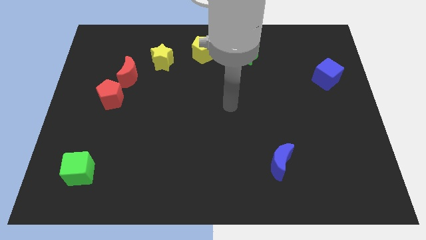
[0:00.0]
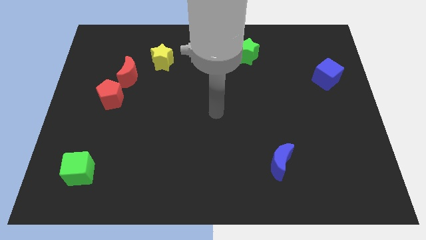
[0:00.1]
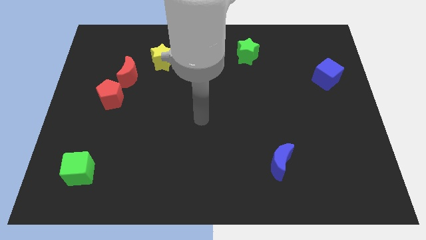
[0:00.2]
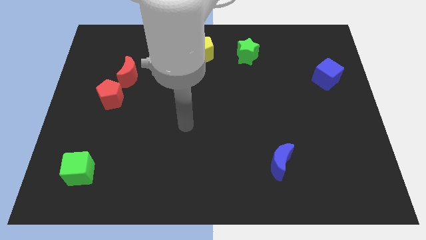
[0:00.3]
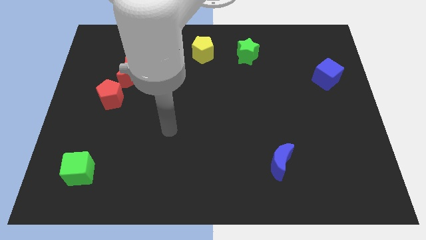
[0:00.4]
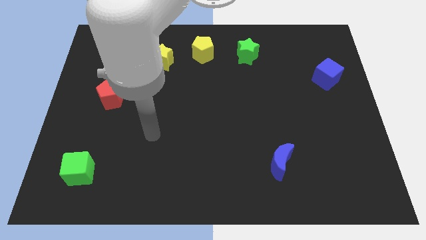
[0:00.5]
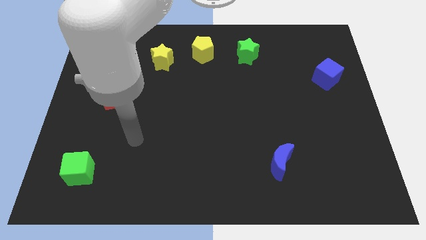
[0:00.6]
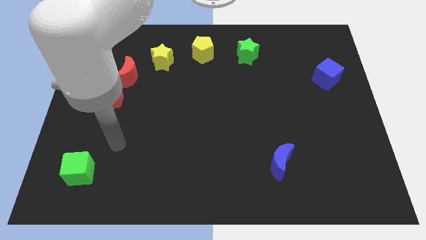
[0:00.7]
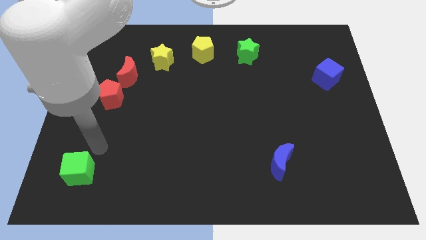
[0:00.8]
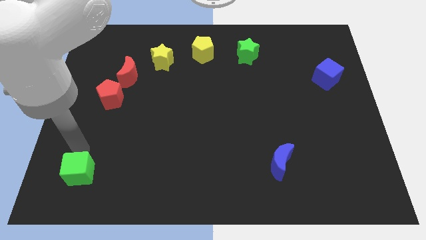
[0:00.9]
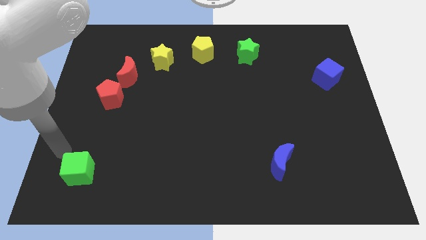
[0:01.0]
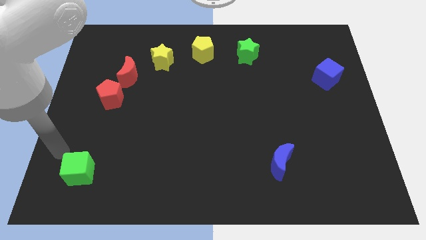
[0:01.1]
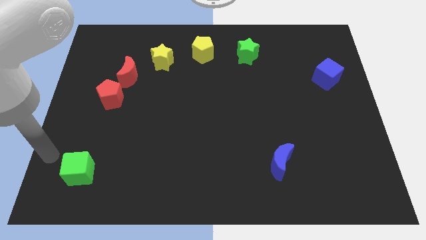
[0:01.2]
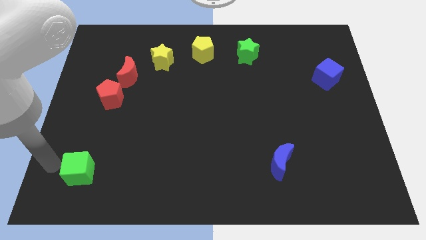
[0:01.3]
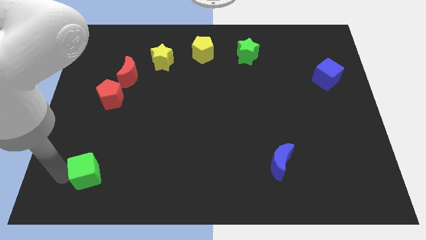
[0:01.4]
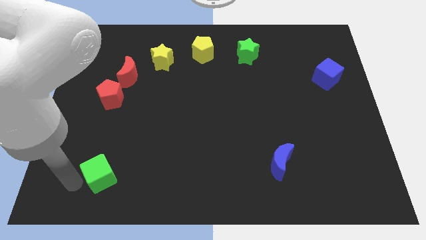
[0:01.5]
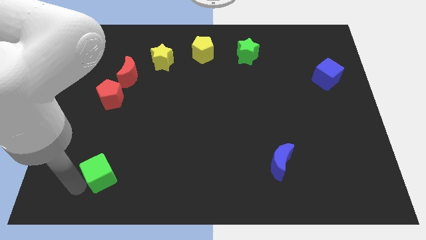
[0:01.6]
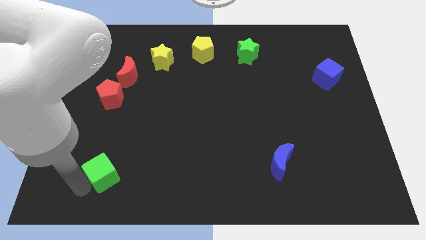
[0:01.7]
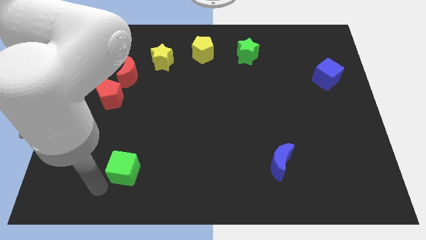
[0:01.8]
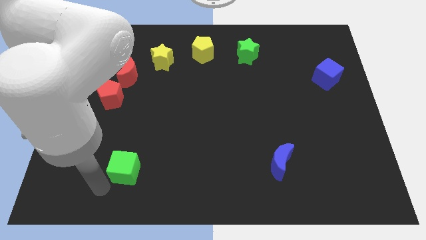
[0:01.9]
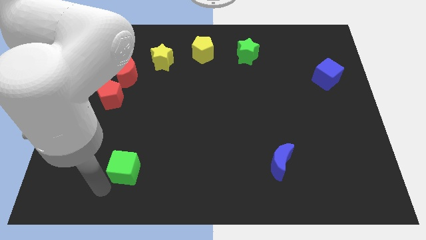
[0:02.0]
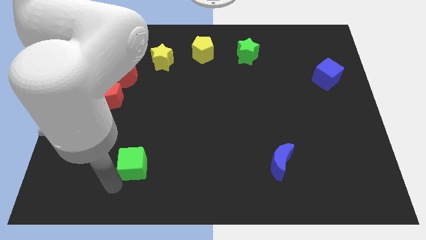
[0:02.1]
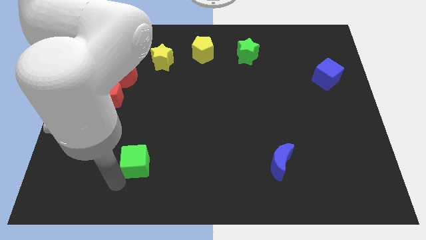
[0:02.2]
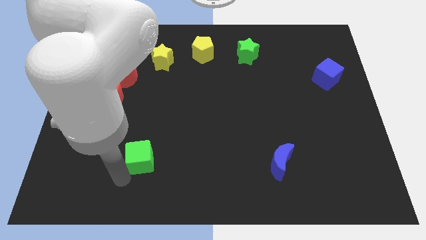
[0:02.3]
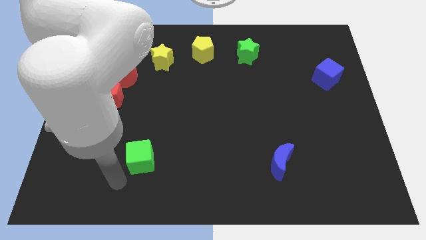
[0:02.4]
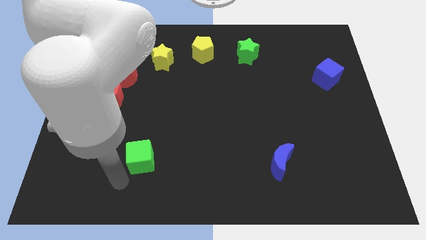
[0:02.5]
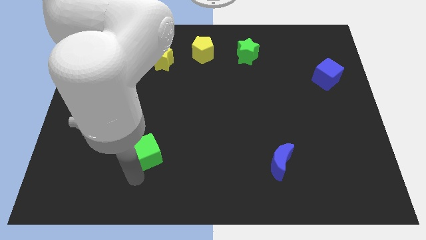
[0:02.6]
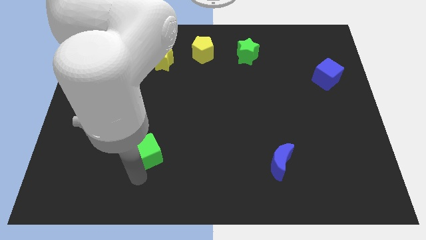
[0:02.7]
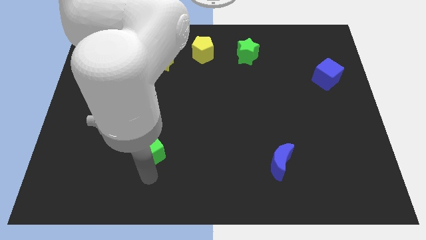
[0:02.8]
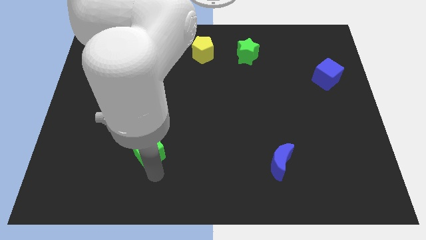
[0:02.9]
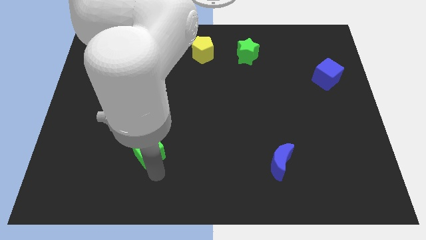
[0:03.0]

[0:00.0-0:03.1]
place green cube to the left of blue moon

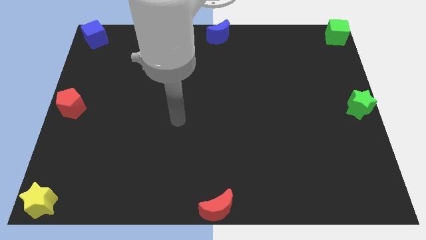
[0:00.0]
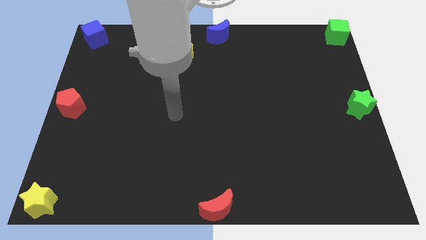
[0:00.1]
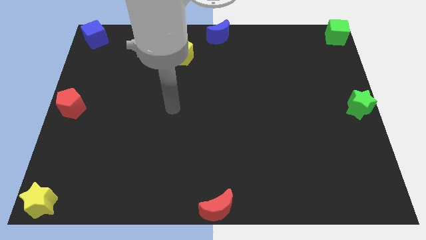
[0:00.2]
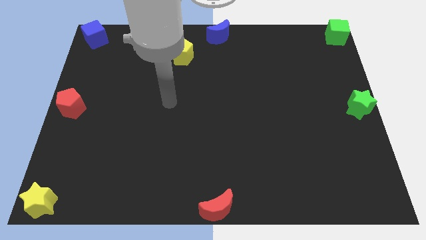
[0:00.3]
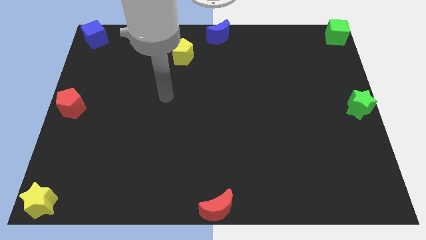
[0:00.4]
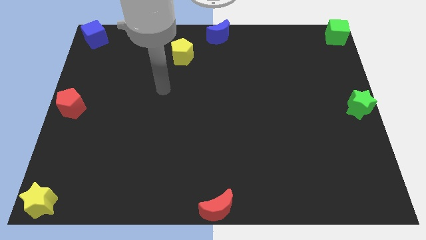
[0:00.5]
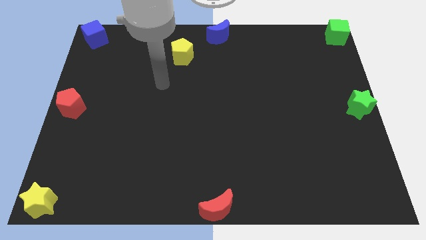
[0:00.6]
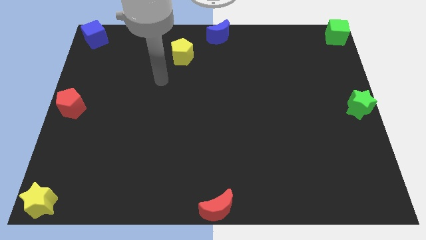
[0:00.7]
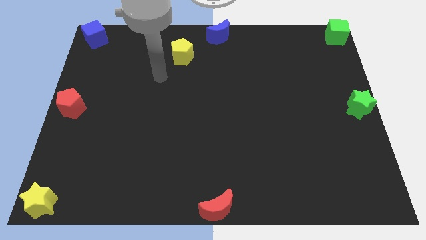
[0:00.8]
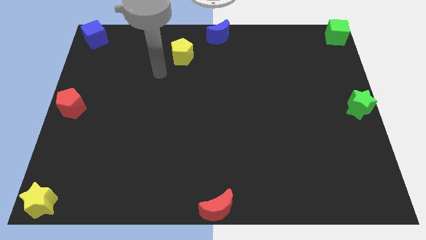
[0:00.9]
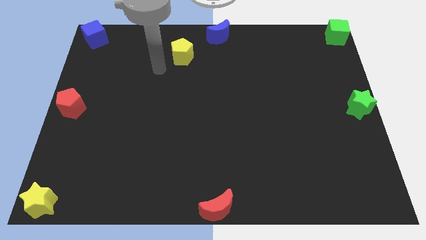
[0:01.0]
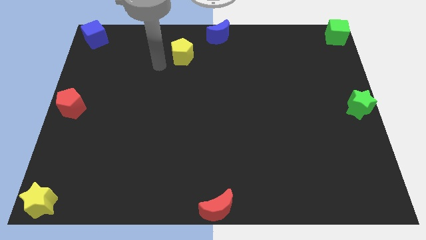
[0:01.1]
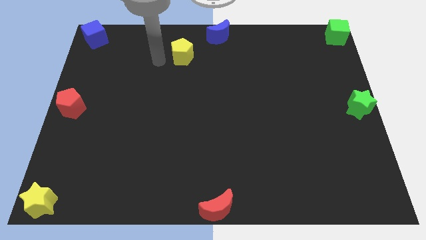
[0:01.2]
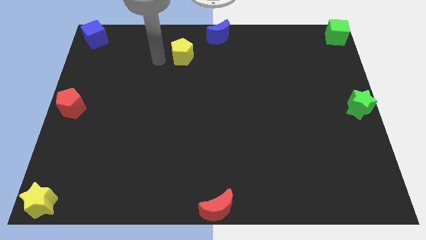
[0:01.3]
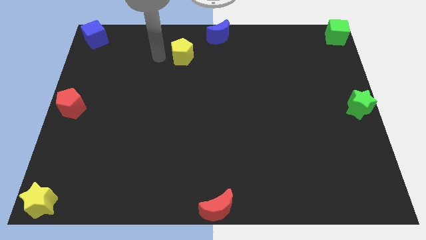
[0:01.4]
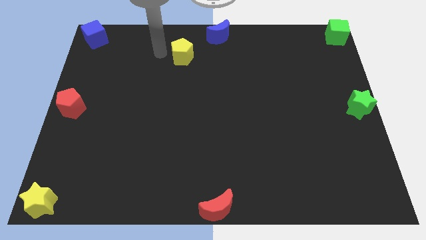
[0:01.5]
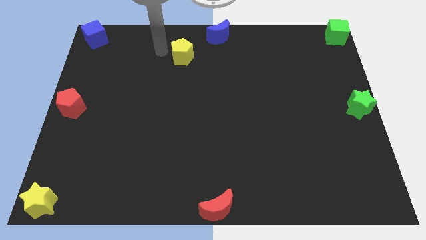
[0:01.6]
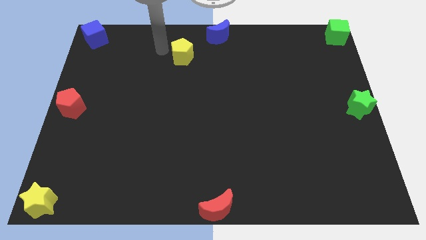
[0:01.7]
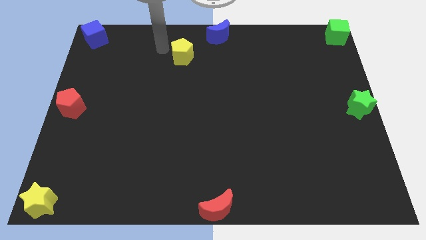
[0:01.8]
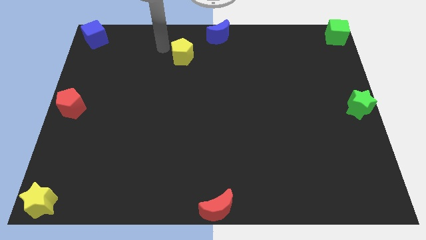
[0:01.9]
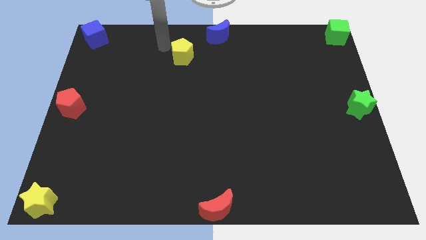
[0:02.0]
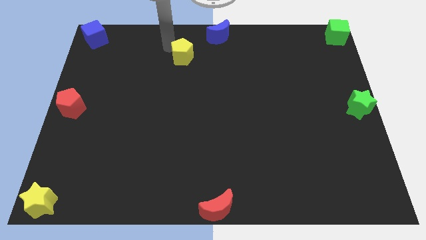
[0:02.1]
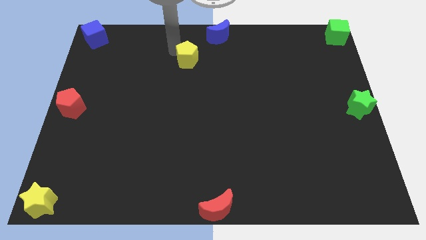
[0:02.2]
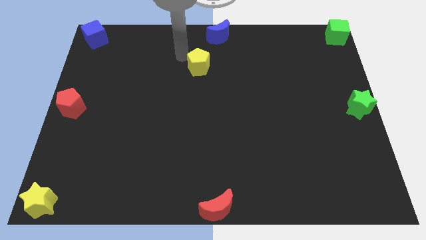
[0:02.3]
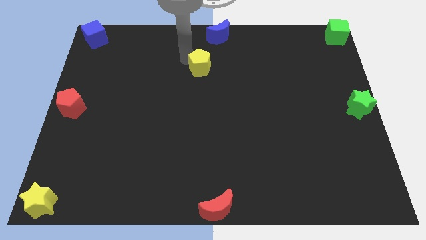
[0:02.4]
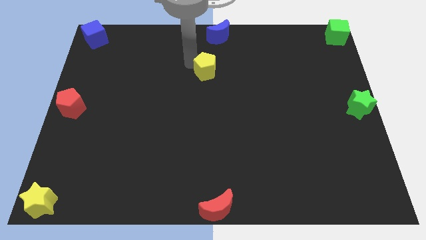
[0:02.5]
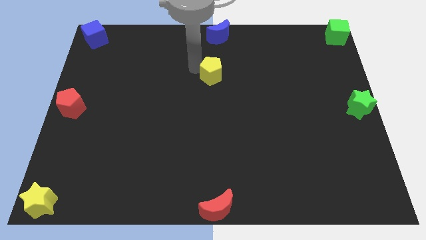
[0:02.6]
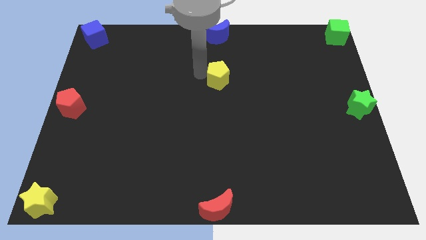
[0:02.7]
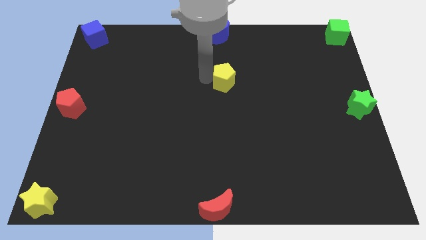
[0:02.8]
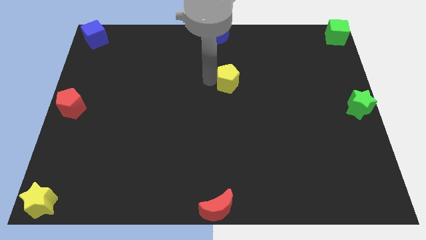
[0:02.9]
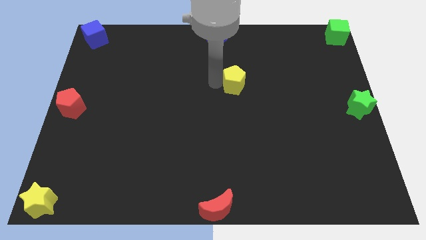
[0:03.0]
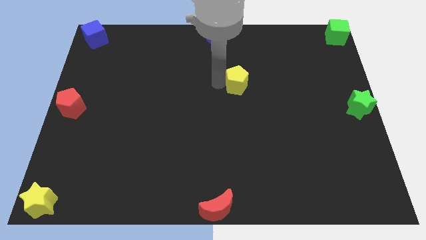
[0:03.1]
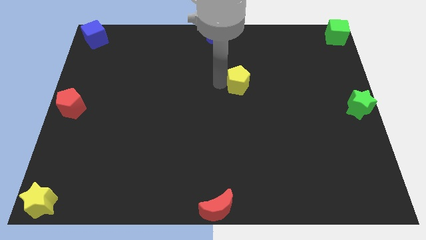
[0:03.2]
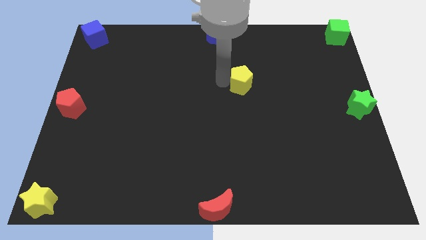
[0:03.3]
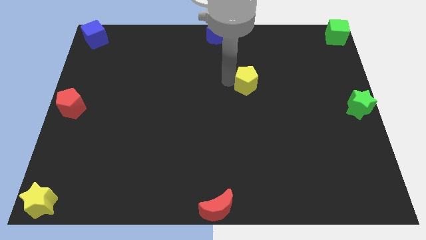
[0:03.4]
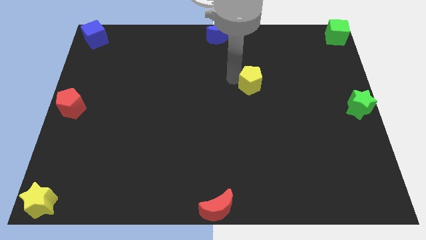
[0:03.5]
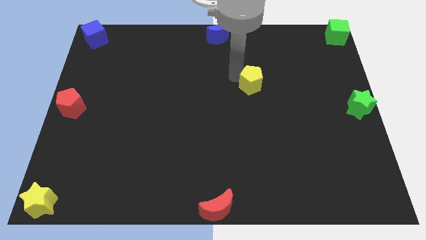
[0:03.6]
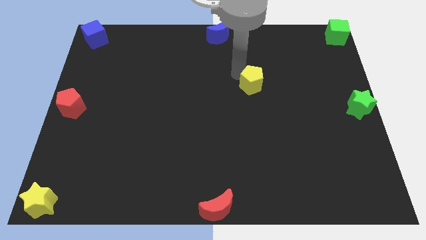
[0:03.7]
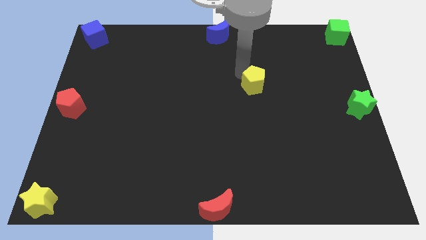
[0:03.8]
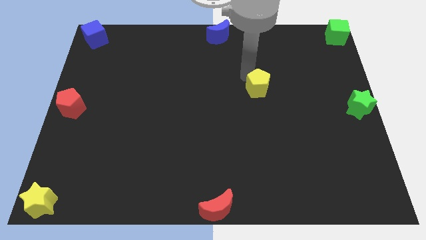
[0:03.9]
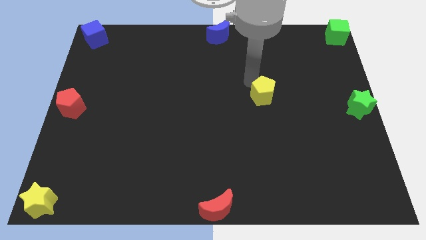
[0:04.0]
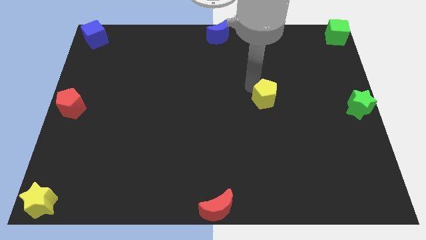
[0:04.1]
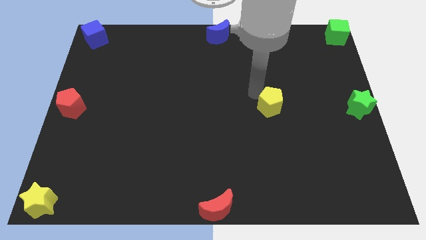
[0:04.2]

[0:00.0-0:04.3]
move the yellow pentagon to the left of the green star

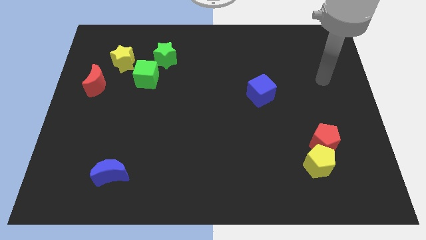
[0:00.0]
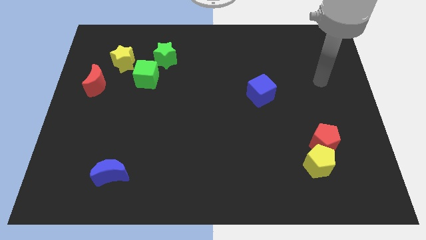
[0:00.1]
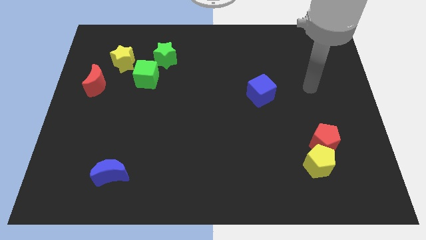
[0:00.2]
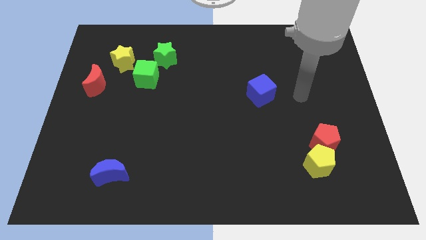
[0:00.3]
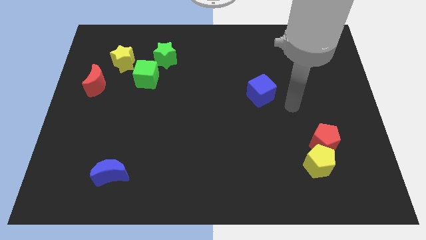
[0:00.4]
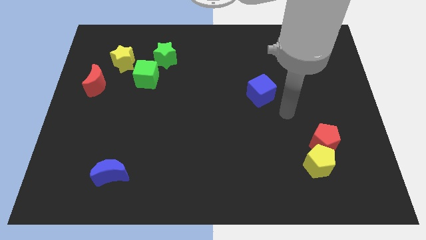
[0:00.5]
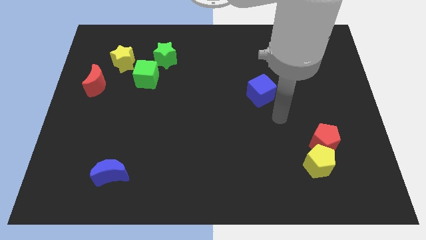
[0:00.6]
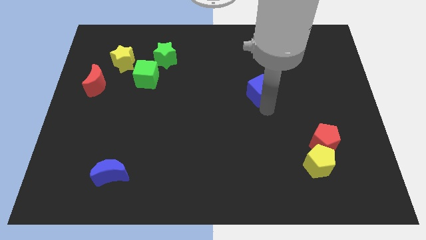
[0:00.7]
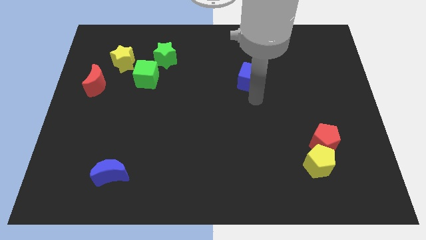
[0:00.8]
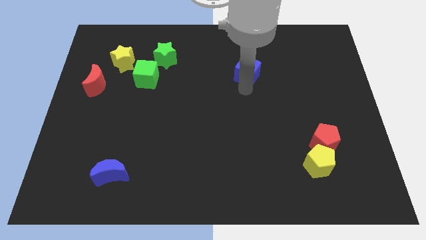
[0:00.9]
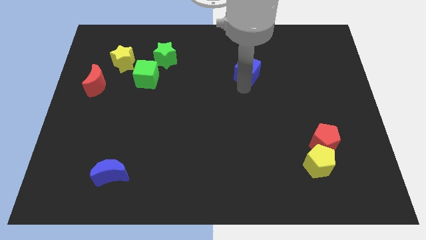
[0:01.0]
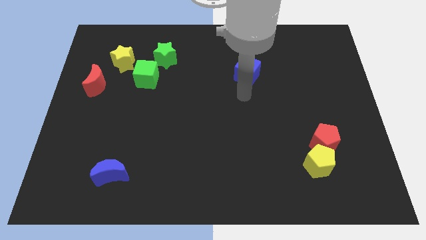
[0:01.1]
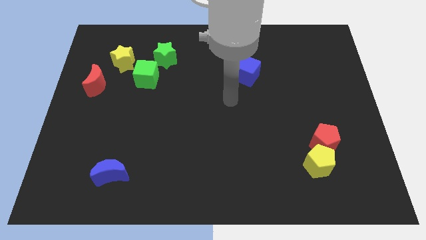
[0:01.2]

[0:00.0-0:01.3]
move blue block slightly to the top of the board

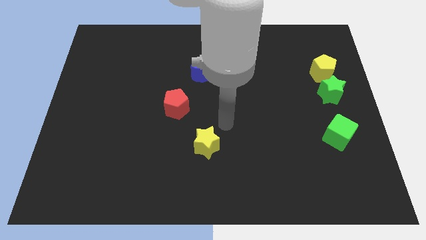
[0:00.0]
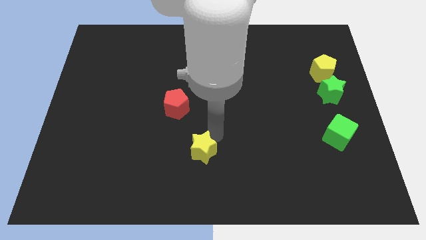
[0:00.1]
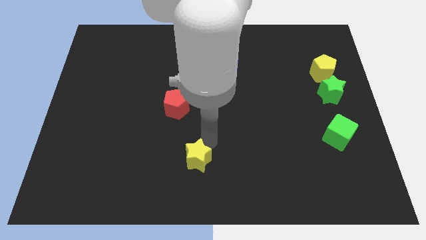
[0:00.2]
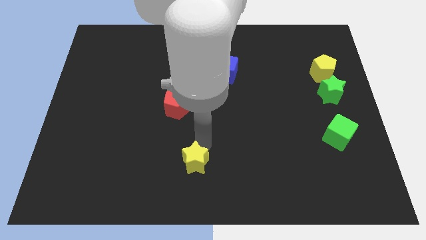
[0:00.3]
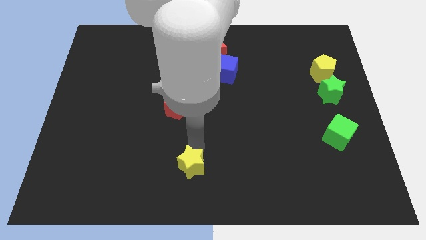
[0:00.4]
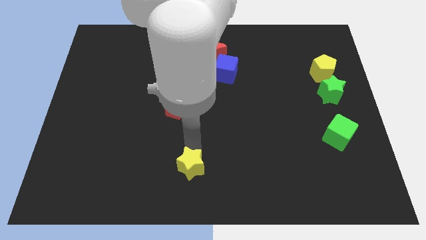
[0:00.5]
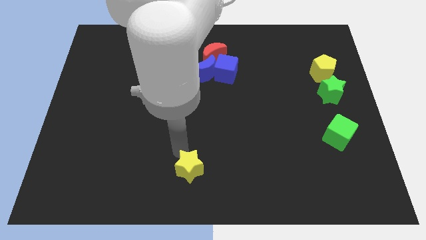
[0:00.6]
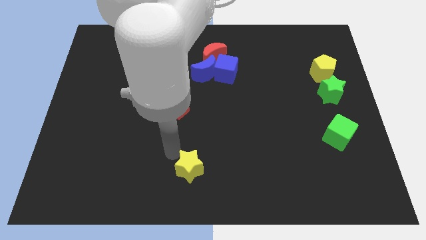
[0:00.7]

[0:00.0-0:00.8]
place the yellow star straight below the red pentagon
